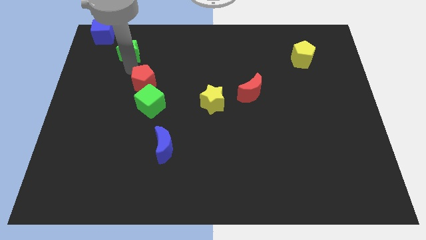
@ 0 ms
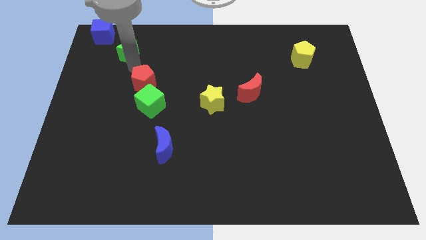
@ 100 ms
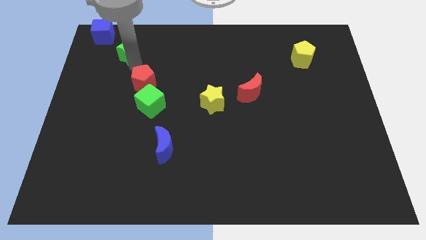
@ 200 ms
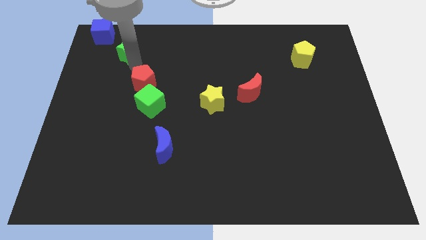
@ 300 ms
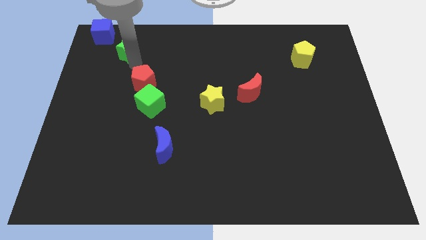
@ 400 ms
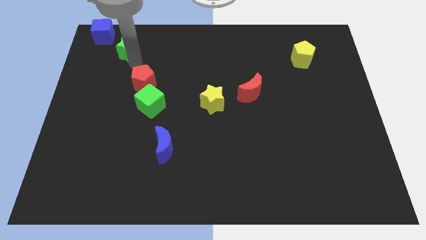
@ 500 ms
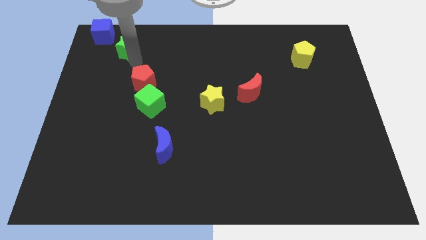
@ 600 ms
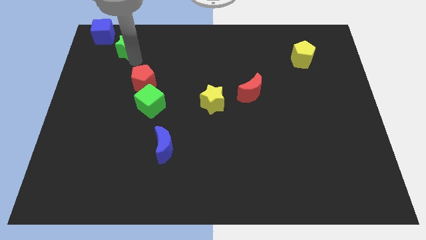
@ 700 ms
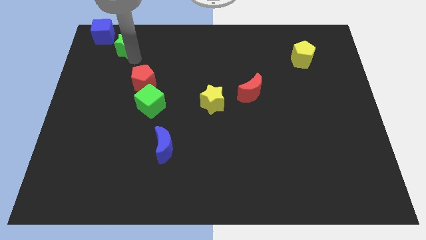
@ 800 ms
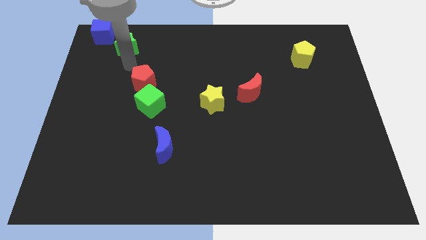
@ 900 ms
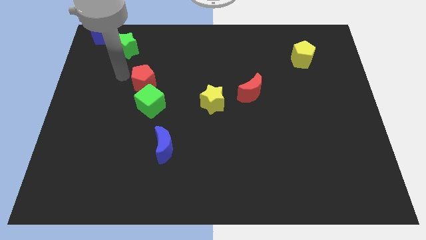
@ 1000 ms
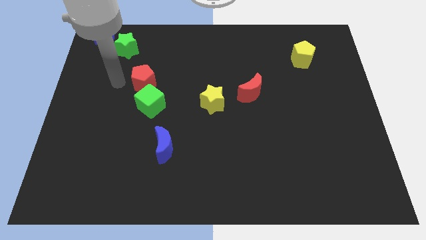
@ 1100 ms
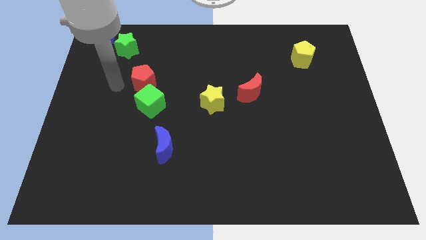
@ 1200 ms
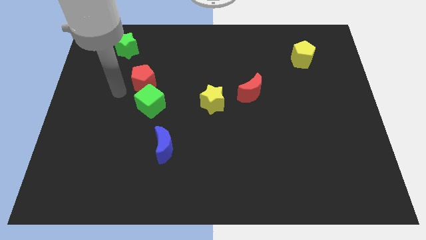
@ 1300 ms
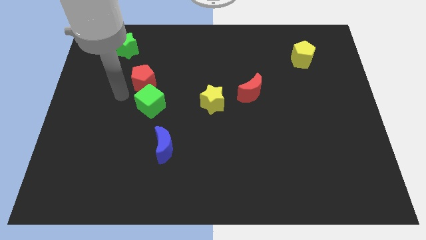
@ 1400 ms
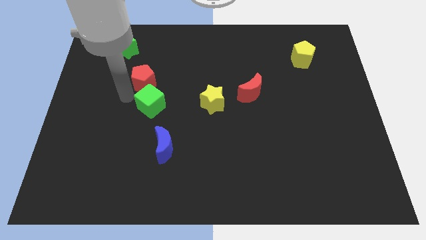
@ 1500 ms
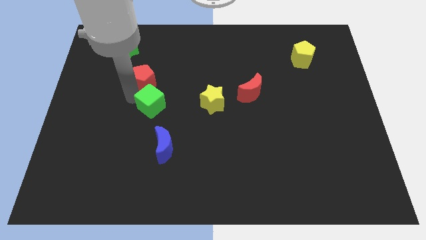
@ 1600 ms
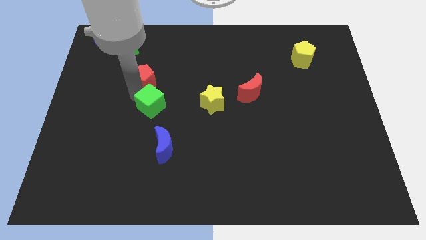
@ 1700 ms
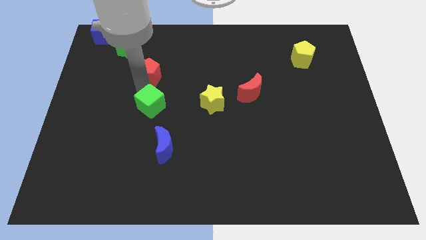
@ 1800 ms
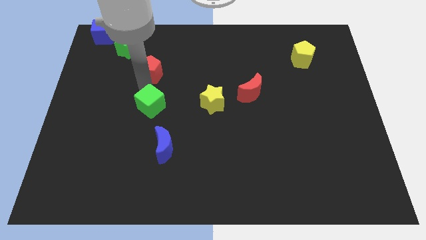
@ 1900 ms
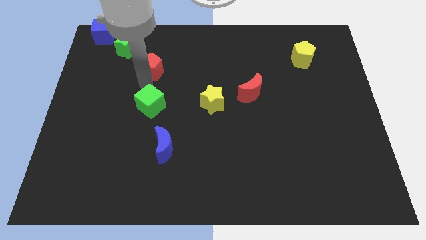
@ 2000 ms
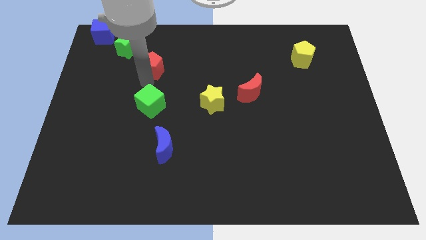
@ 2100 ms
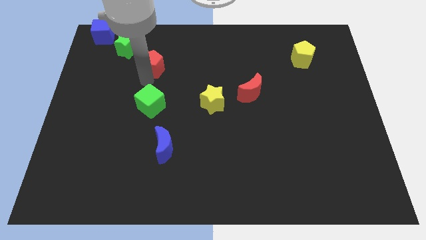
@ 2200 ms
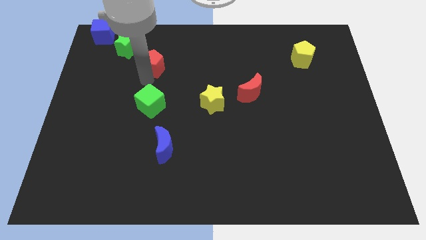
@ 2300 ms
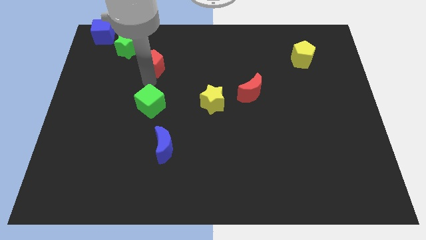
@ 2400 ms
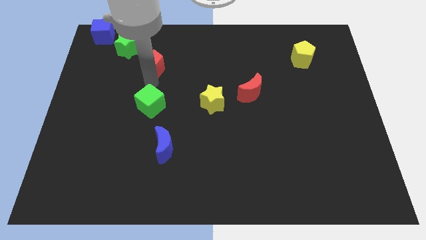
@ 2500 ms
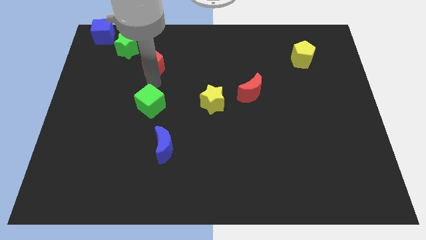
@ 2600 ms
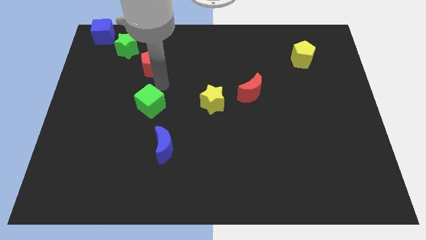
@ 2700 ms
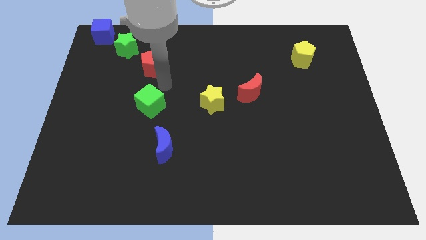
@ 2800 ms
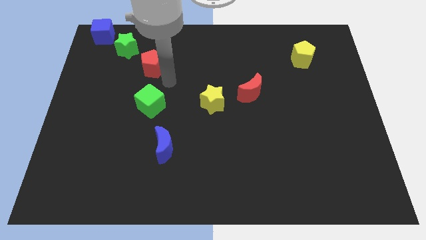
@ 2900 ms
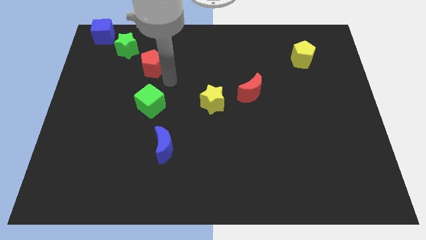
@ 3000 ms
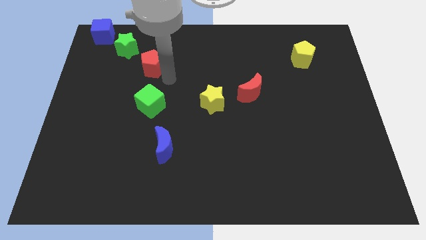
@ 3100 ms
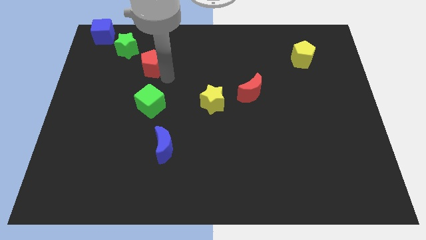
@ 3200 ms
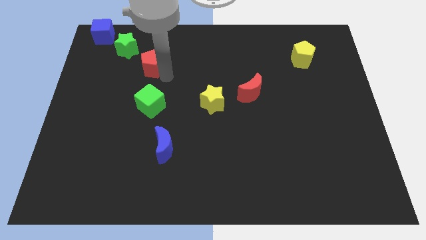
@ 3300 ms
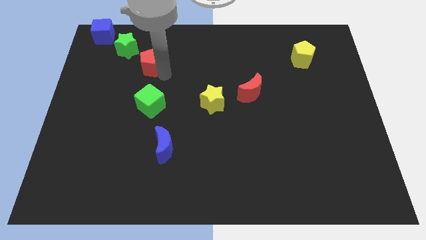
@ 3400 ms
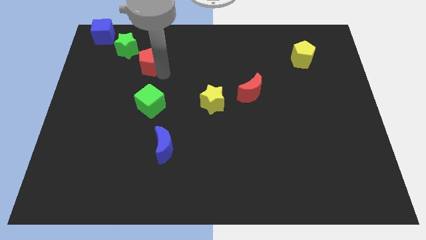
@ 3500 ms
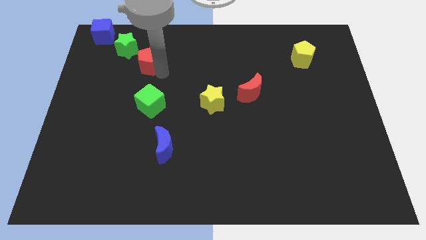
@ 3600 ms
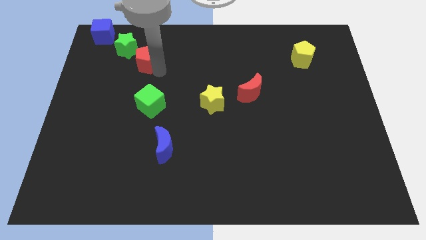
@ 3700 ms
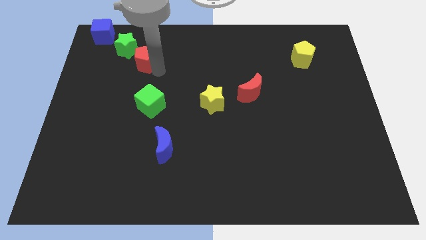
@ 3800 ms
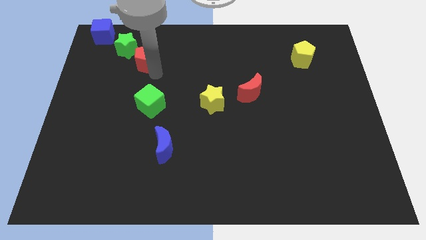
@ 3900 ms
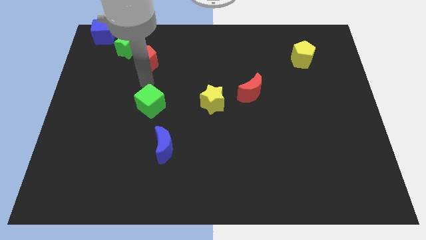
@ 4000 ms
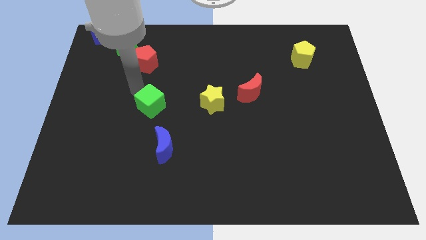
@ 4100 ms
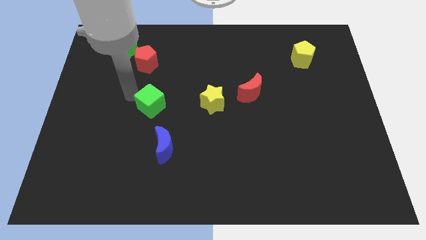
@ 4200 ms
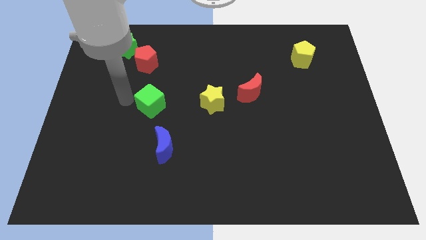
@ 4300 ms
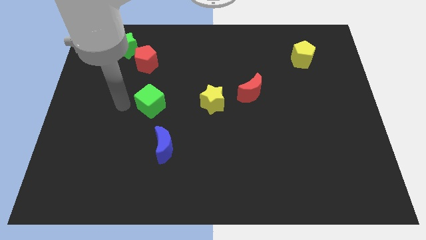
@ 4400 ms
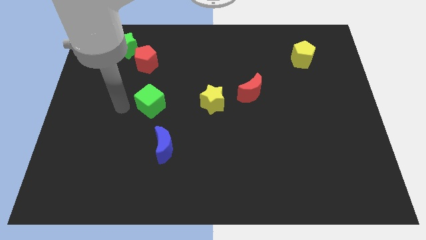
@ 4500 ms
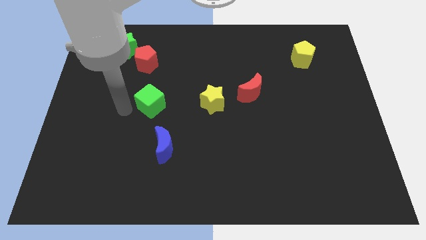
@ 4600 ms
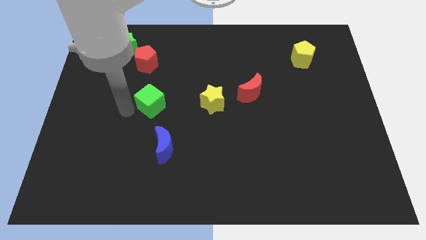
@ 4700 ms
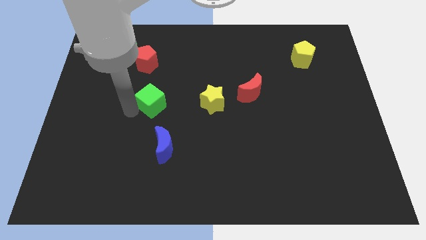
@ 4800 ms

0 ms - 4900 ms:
move the red pentagon diagonally below the green star

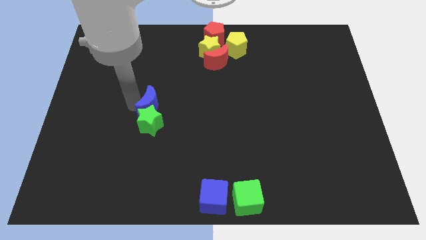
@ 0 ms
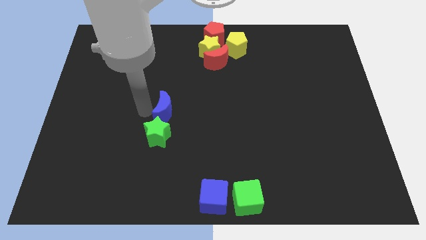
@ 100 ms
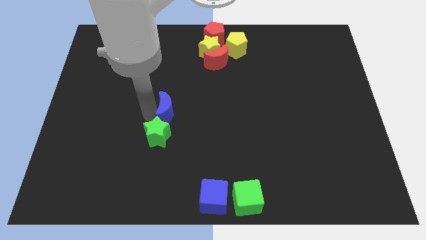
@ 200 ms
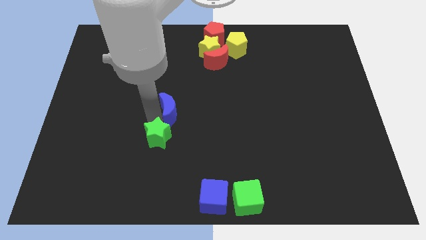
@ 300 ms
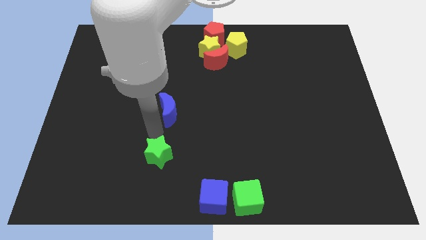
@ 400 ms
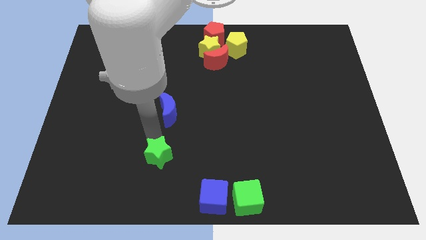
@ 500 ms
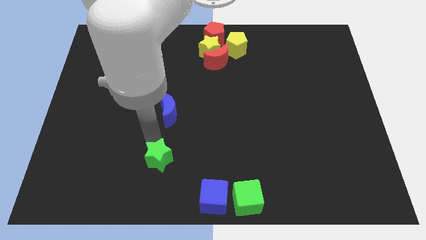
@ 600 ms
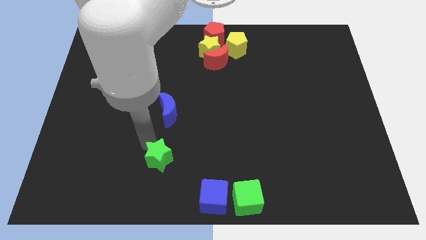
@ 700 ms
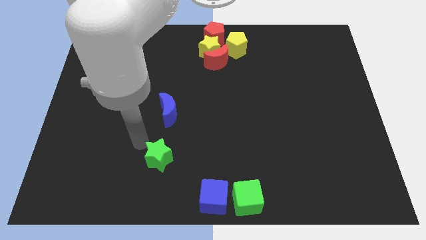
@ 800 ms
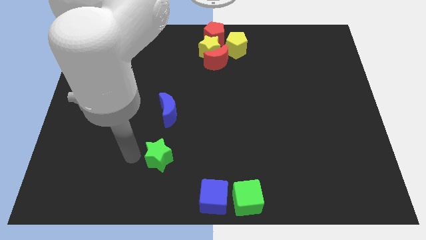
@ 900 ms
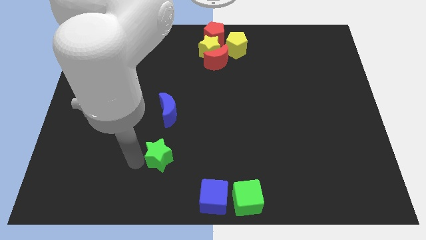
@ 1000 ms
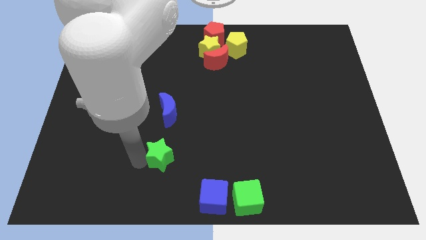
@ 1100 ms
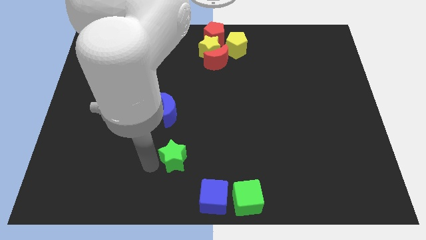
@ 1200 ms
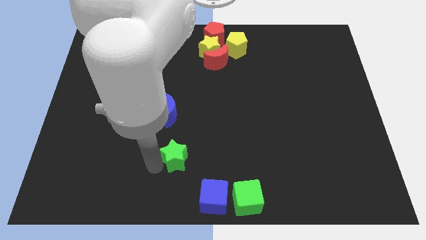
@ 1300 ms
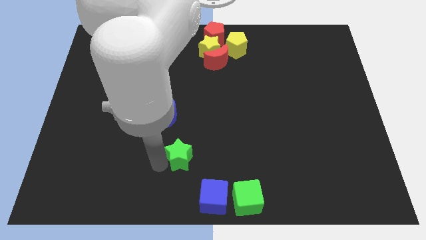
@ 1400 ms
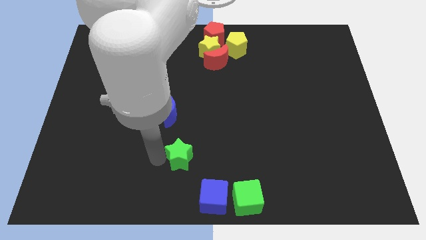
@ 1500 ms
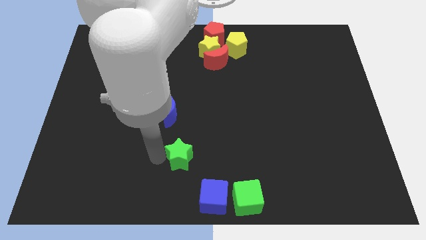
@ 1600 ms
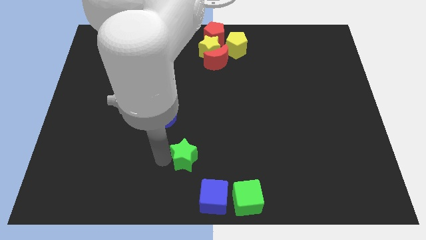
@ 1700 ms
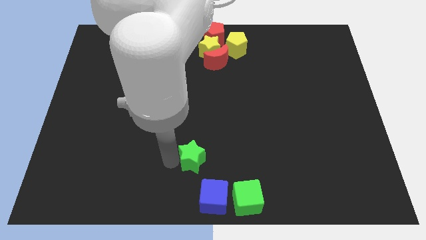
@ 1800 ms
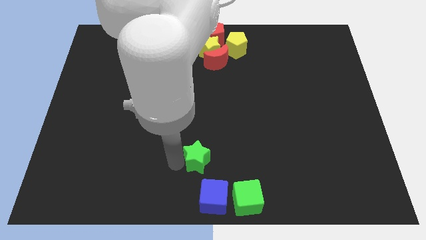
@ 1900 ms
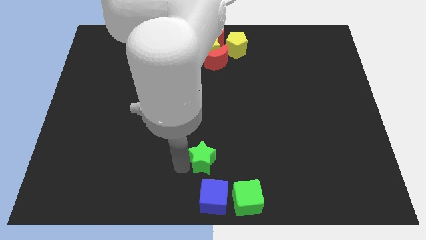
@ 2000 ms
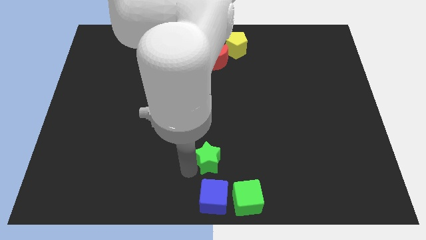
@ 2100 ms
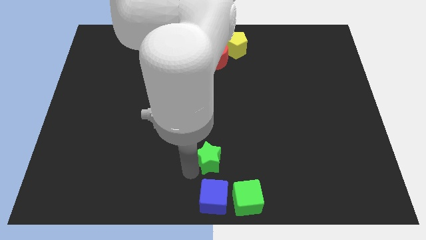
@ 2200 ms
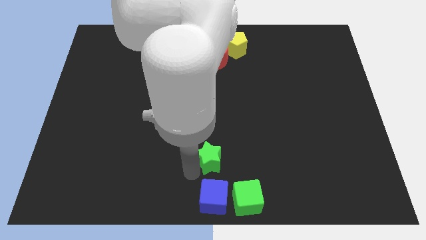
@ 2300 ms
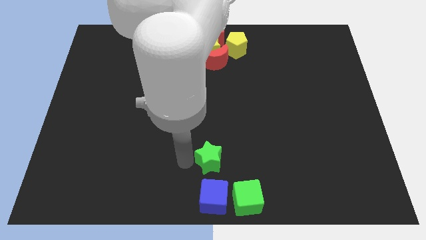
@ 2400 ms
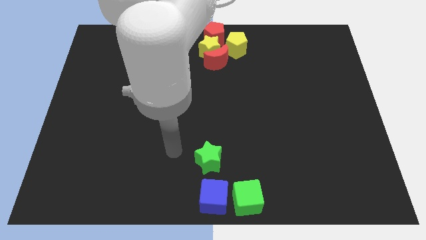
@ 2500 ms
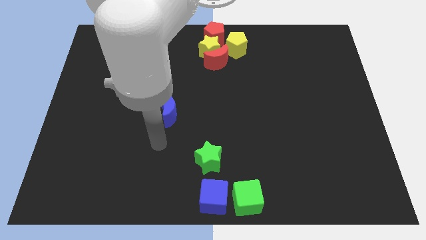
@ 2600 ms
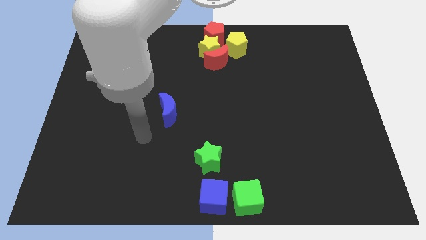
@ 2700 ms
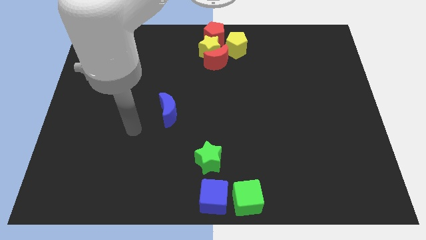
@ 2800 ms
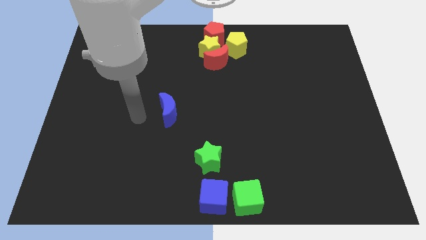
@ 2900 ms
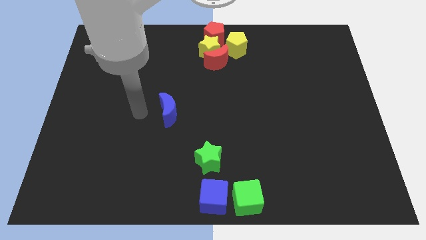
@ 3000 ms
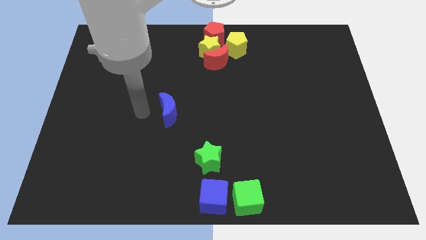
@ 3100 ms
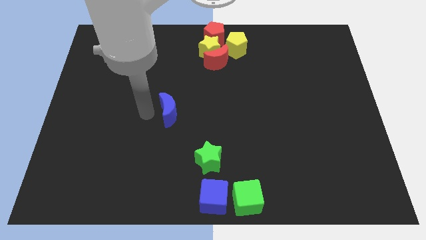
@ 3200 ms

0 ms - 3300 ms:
put the green star vertically above the blue cube

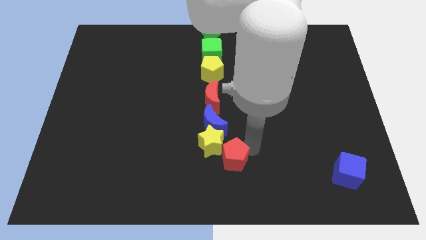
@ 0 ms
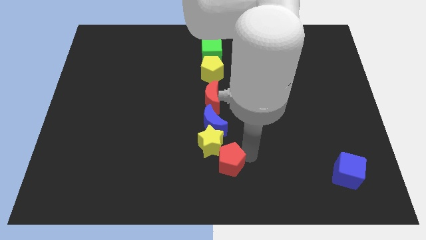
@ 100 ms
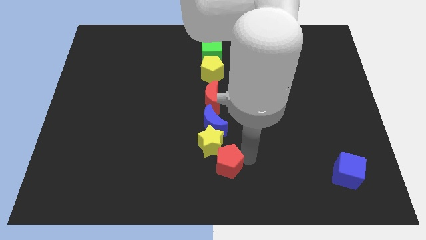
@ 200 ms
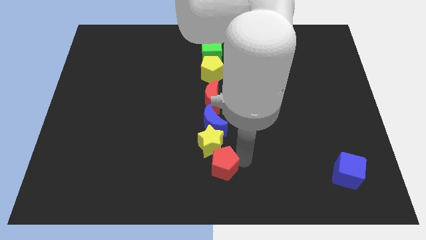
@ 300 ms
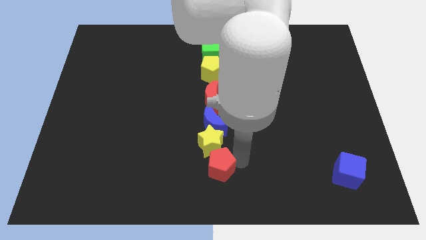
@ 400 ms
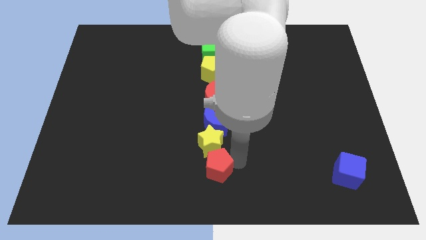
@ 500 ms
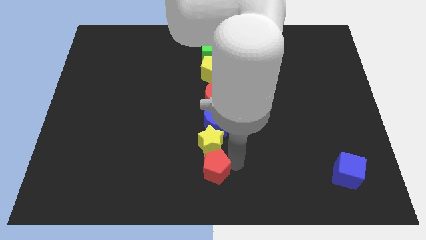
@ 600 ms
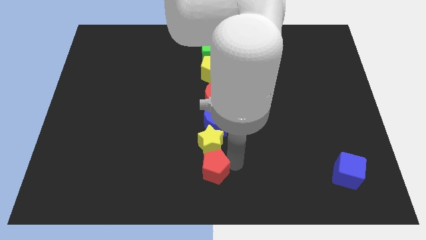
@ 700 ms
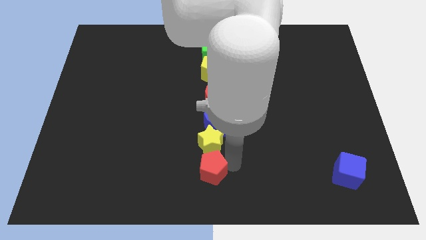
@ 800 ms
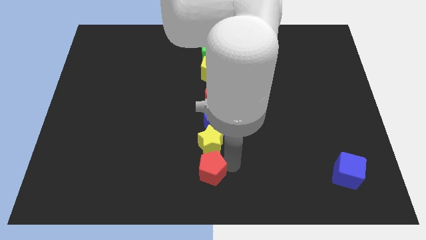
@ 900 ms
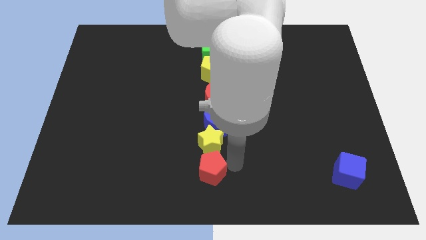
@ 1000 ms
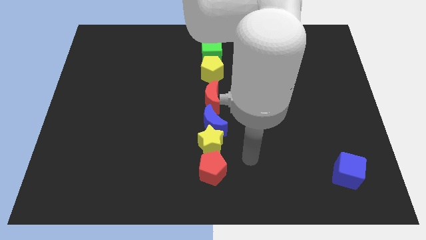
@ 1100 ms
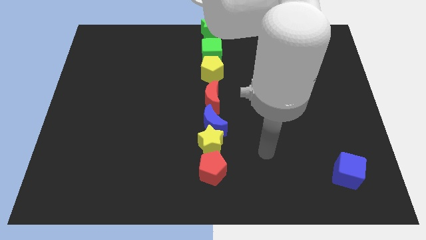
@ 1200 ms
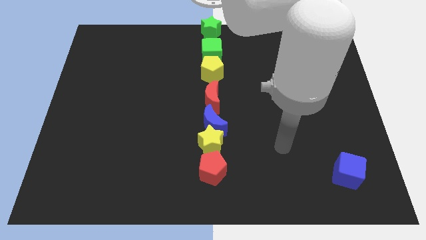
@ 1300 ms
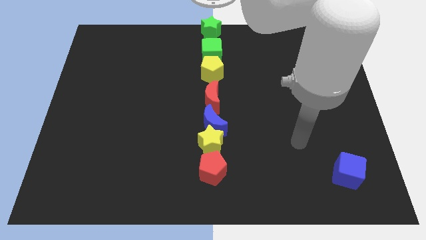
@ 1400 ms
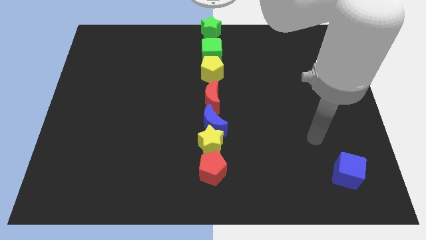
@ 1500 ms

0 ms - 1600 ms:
put the red pentagon below the yellow star
